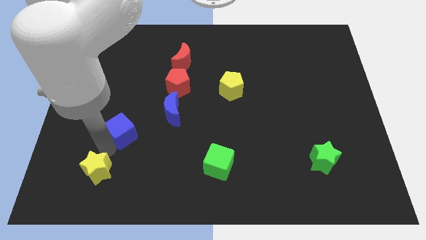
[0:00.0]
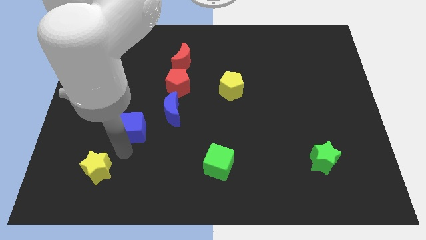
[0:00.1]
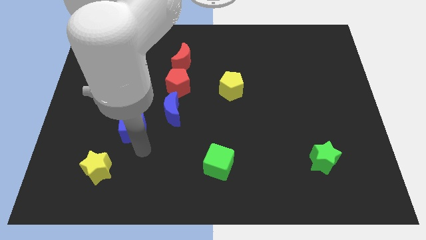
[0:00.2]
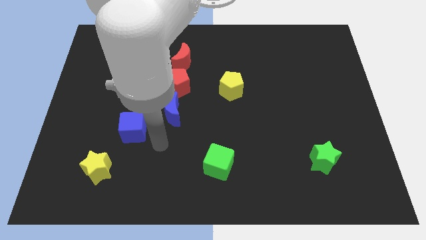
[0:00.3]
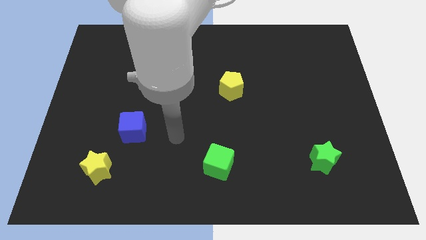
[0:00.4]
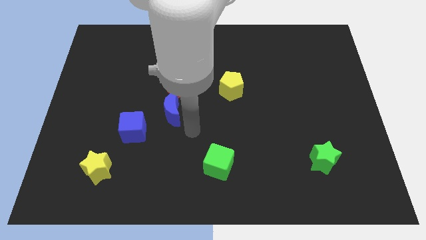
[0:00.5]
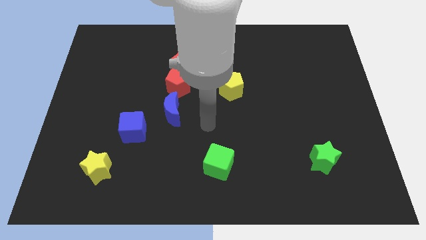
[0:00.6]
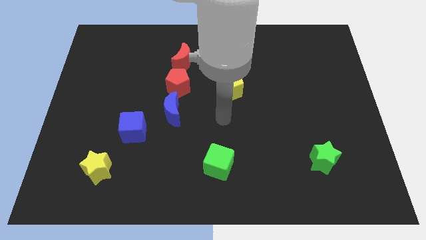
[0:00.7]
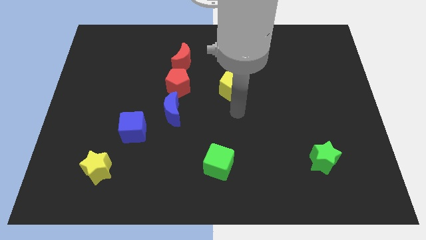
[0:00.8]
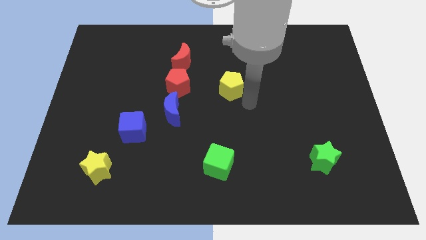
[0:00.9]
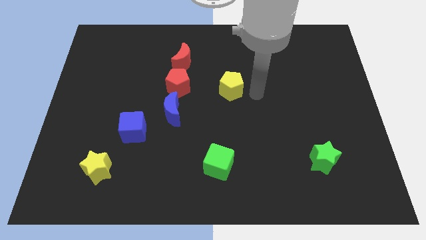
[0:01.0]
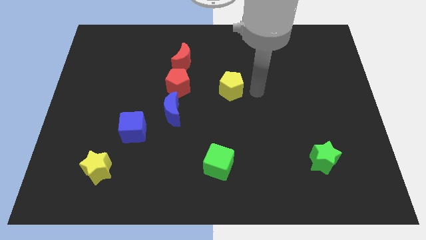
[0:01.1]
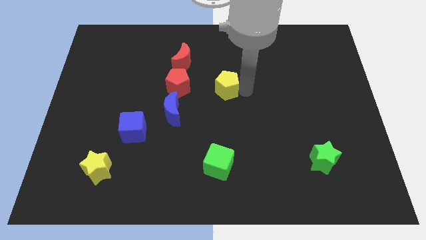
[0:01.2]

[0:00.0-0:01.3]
slide the blue cube towards right

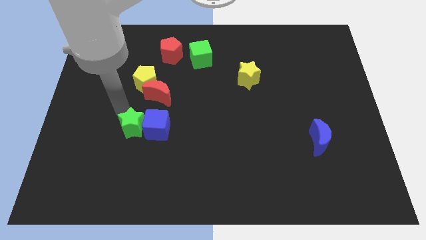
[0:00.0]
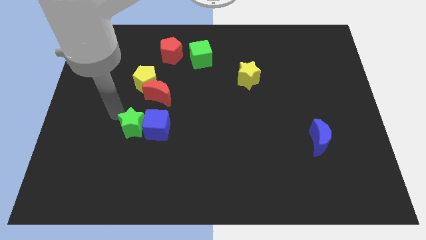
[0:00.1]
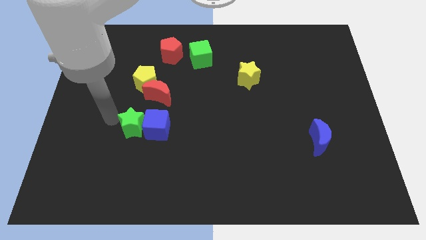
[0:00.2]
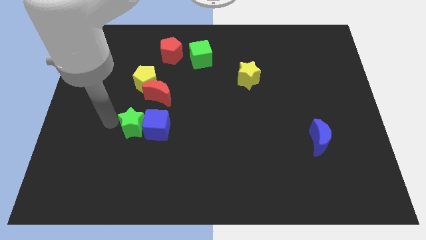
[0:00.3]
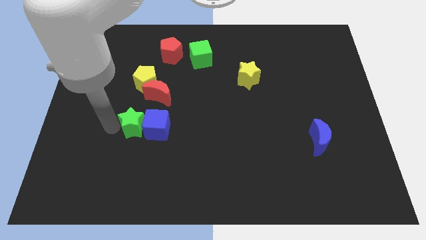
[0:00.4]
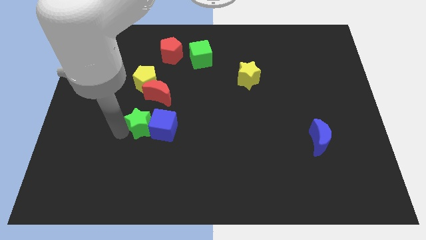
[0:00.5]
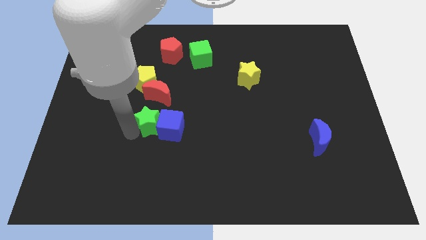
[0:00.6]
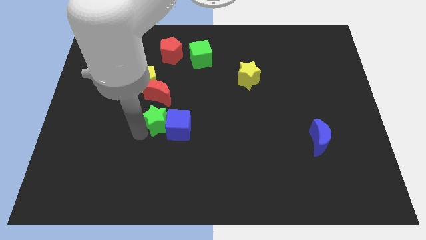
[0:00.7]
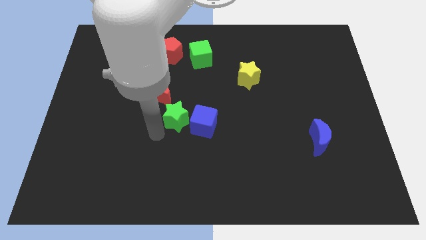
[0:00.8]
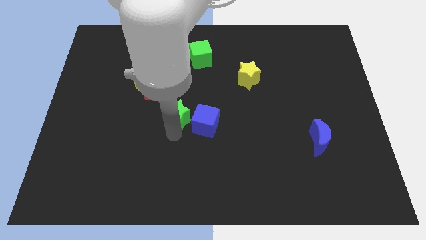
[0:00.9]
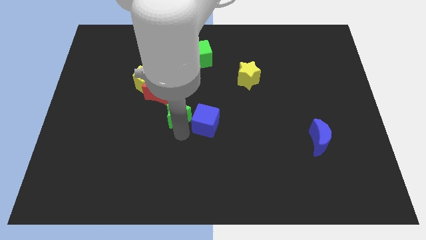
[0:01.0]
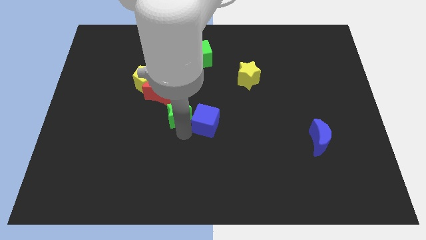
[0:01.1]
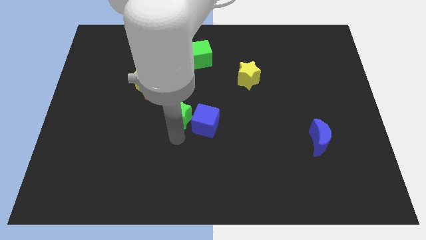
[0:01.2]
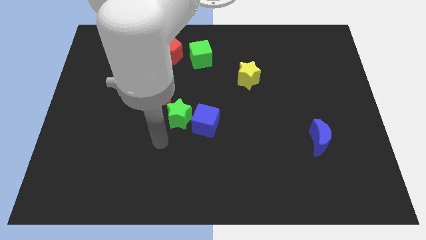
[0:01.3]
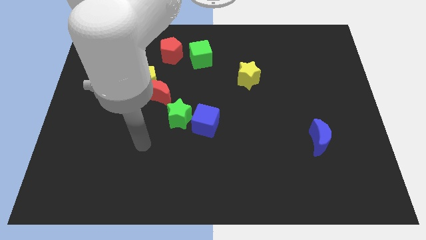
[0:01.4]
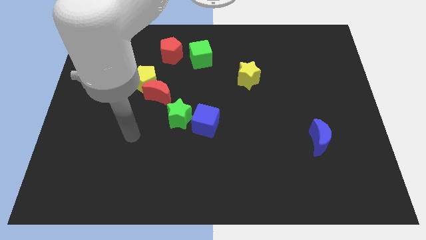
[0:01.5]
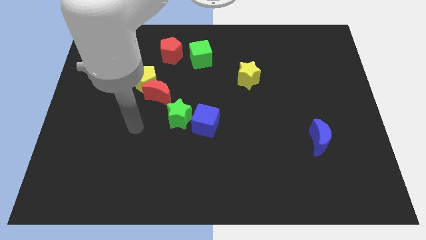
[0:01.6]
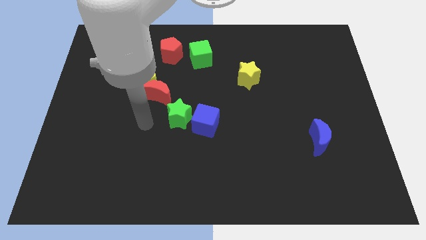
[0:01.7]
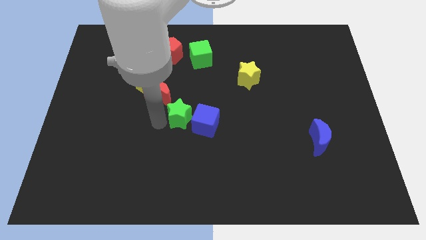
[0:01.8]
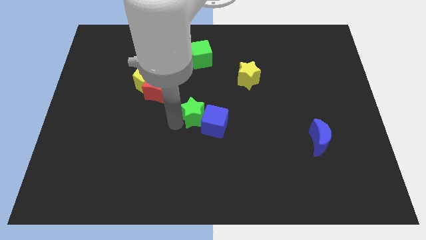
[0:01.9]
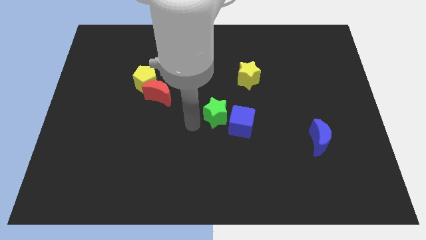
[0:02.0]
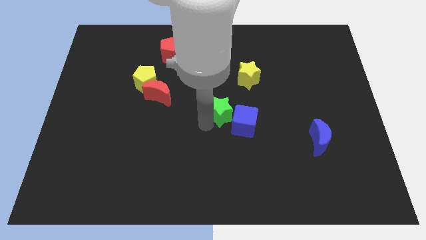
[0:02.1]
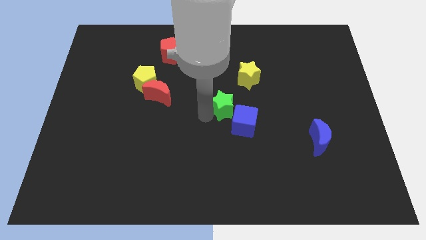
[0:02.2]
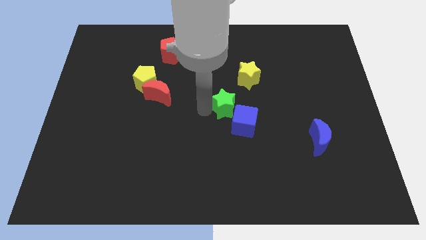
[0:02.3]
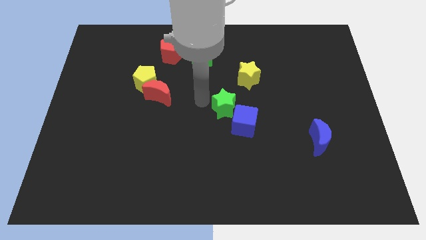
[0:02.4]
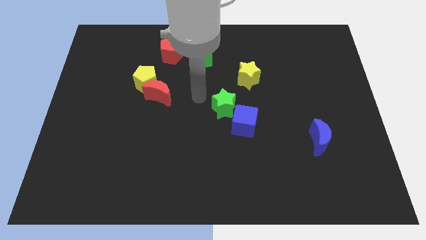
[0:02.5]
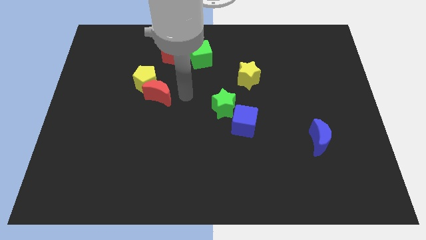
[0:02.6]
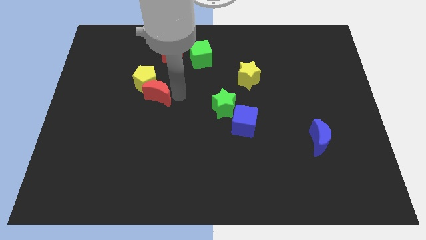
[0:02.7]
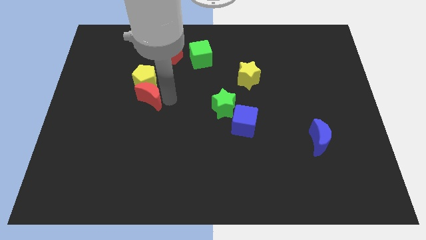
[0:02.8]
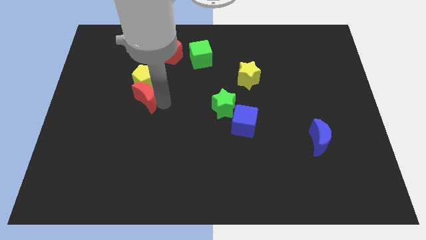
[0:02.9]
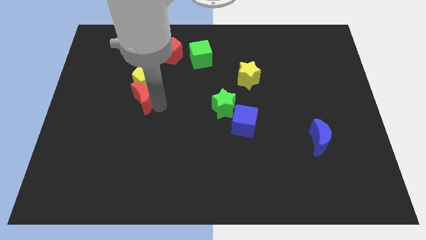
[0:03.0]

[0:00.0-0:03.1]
move green star to the center of the board

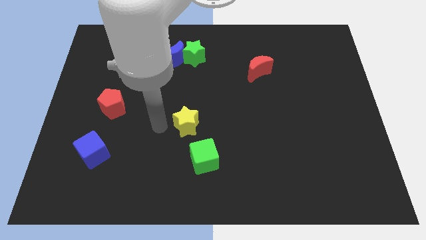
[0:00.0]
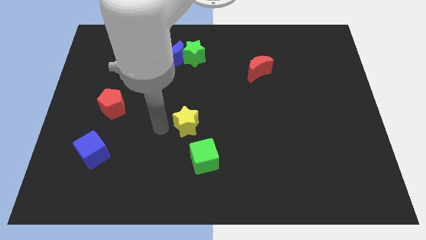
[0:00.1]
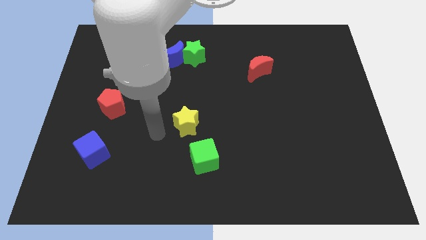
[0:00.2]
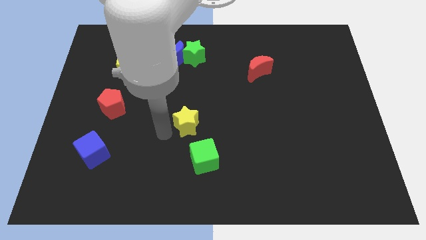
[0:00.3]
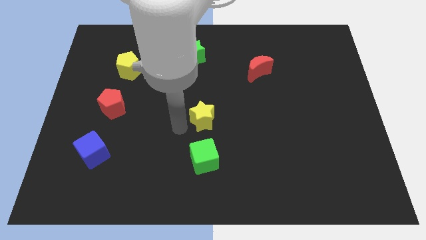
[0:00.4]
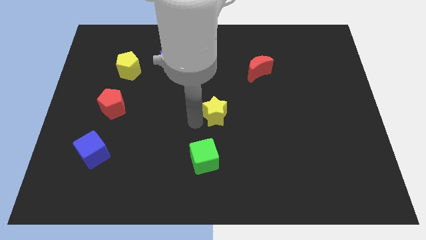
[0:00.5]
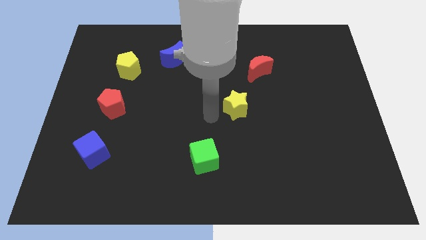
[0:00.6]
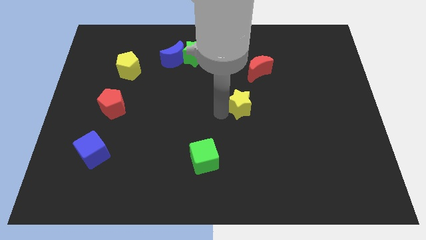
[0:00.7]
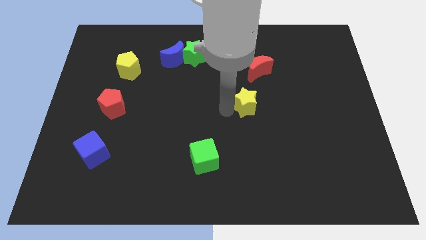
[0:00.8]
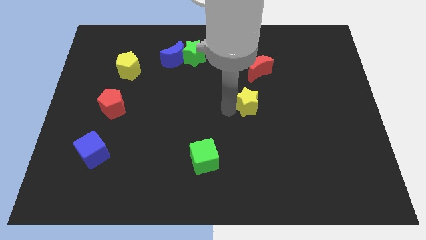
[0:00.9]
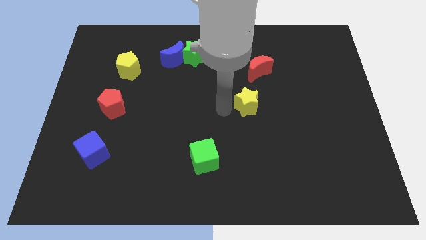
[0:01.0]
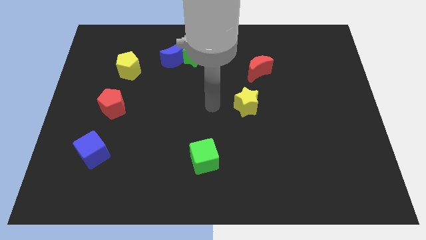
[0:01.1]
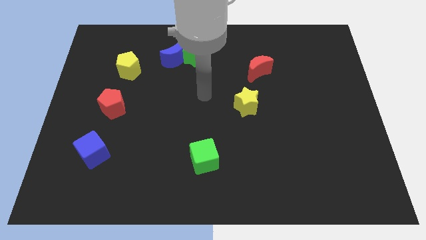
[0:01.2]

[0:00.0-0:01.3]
push the yellow star to the right side of the board

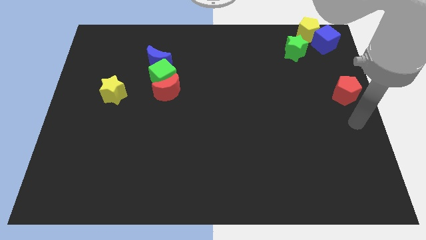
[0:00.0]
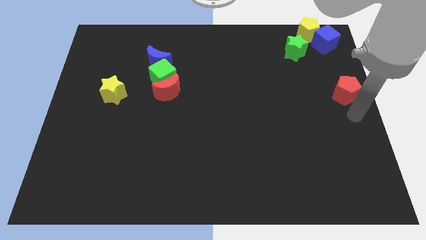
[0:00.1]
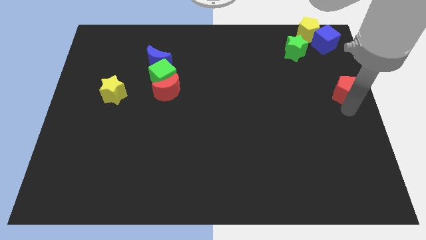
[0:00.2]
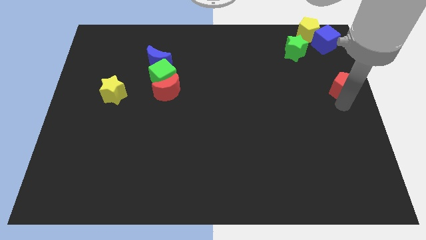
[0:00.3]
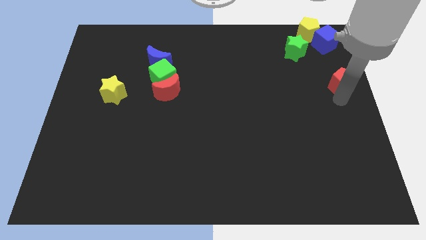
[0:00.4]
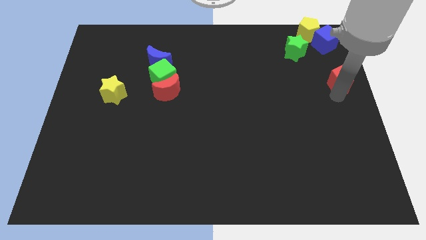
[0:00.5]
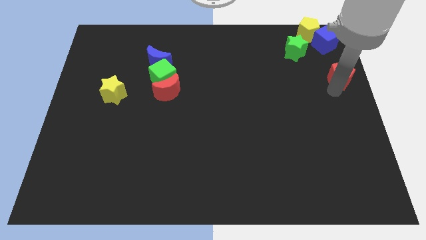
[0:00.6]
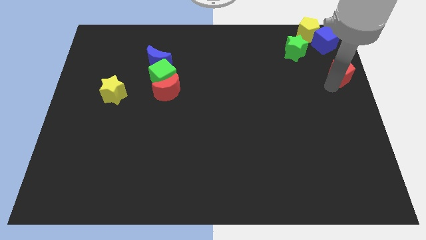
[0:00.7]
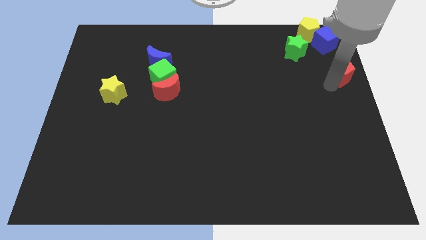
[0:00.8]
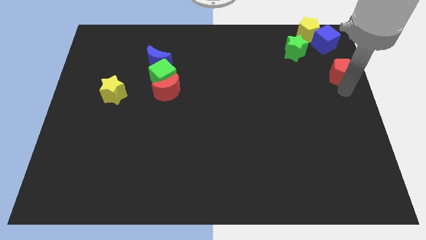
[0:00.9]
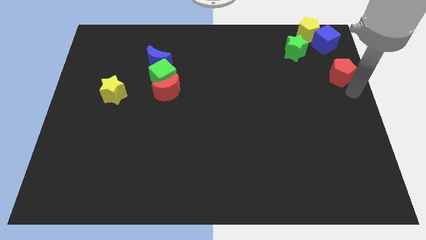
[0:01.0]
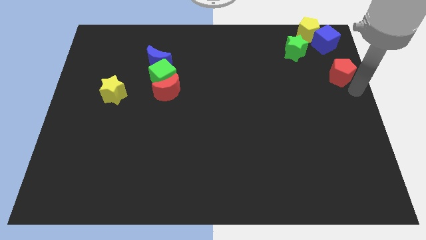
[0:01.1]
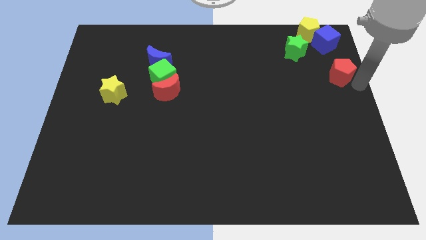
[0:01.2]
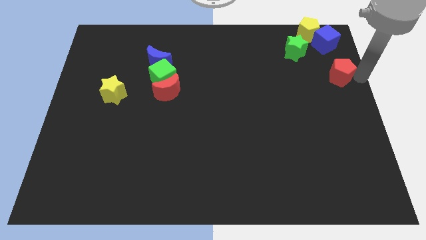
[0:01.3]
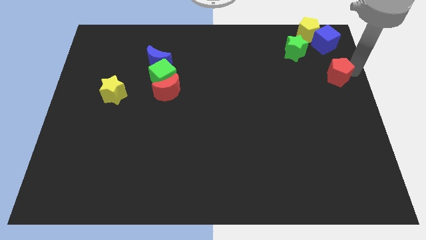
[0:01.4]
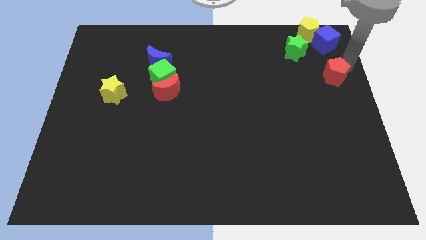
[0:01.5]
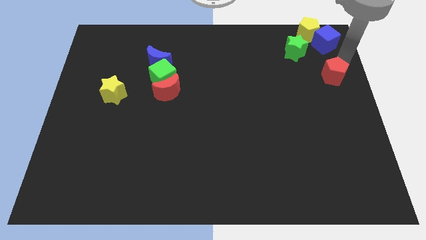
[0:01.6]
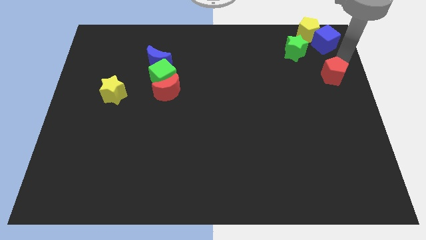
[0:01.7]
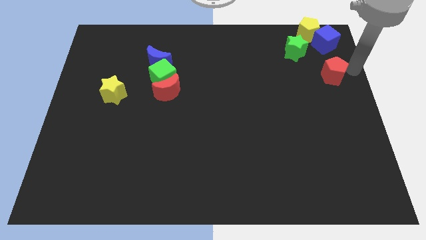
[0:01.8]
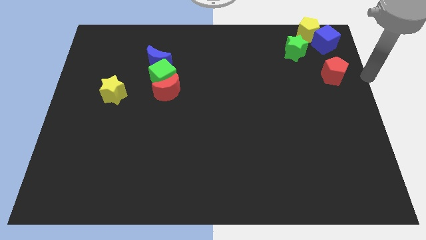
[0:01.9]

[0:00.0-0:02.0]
take the red pentagon towards the blue cube

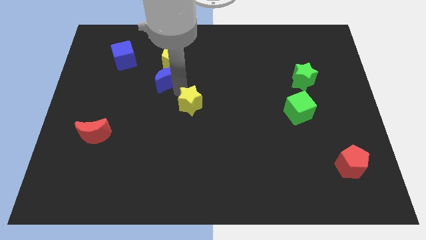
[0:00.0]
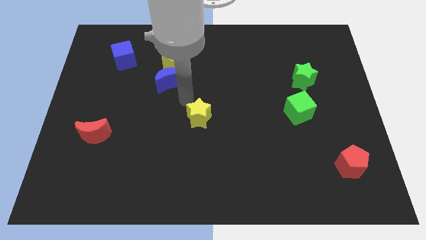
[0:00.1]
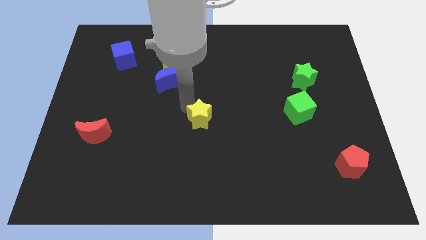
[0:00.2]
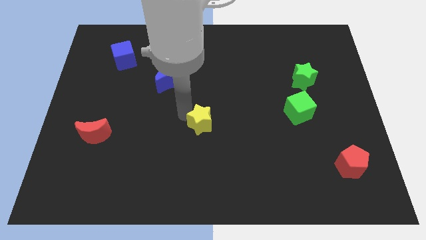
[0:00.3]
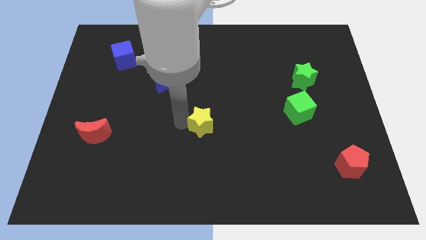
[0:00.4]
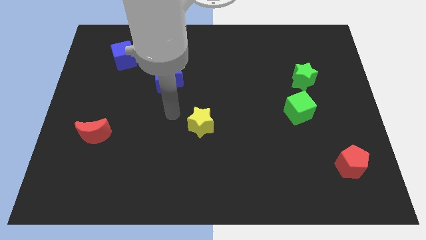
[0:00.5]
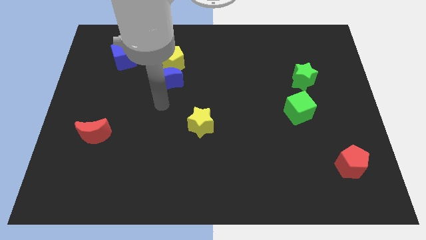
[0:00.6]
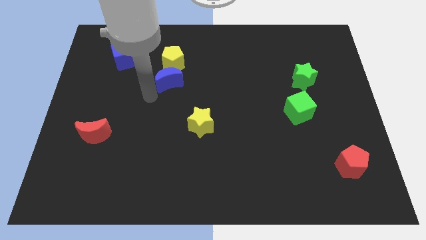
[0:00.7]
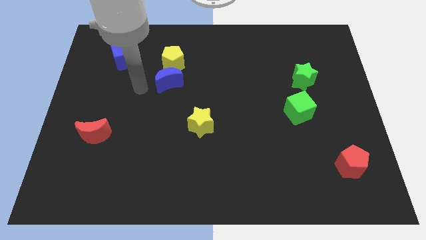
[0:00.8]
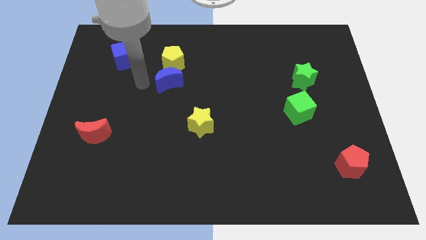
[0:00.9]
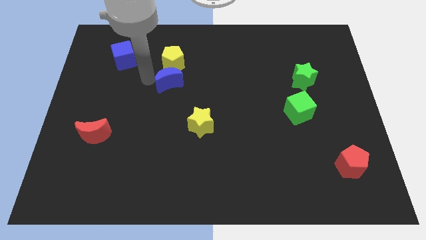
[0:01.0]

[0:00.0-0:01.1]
push yellow star towards the bottom side of the board

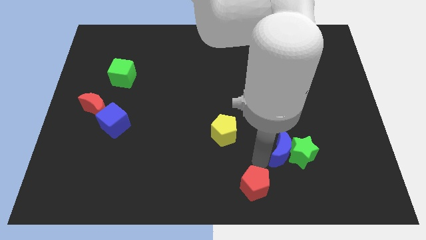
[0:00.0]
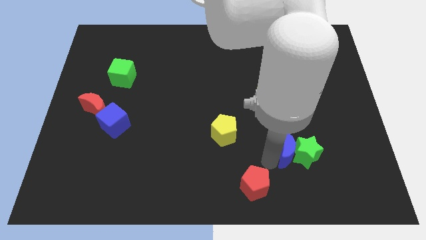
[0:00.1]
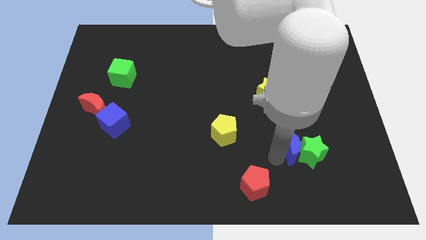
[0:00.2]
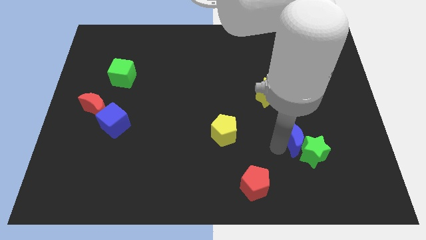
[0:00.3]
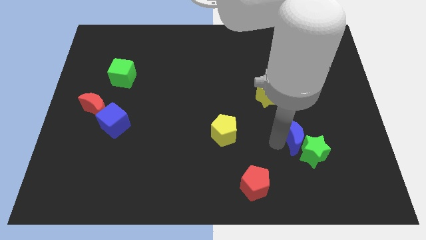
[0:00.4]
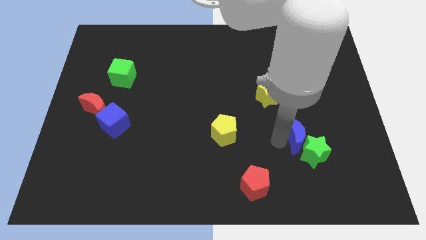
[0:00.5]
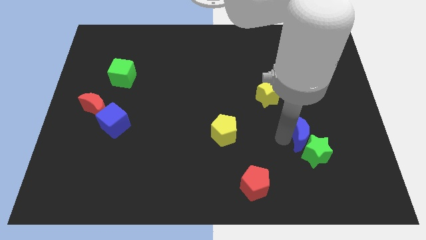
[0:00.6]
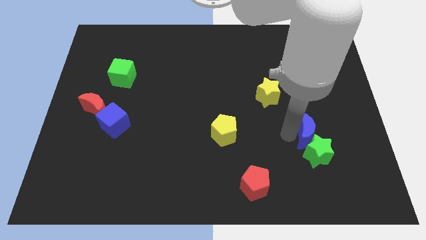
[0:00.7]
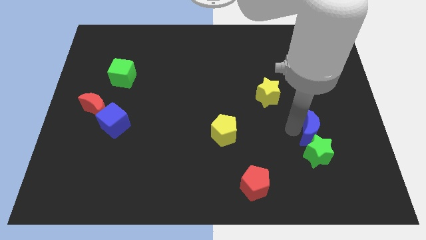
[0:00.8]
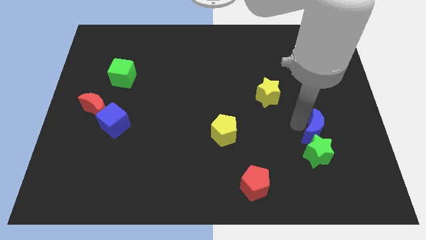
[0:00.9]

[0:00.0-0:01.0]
place the blue moon right to the yellow pentagon
